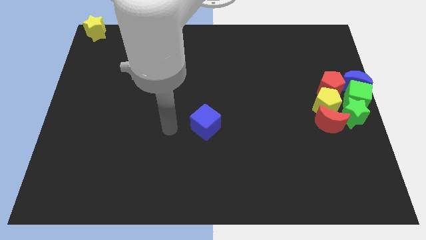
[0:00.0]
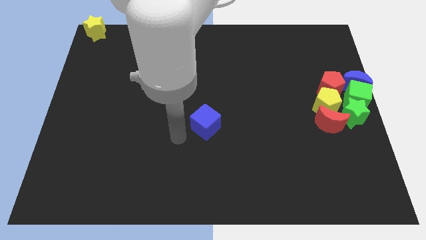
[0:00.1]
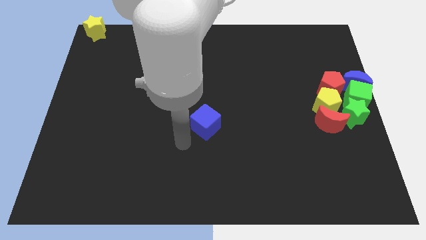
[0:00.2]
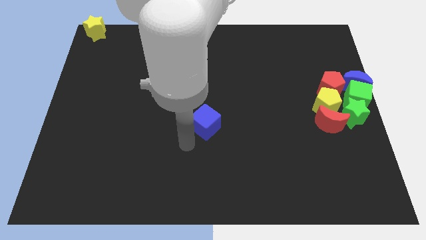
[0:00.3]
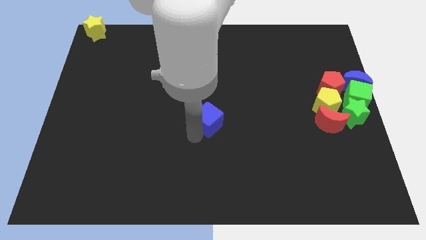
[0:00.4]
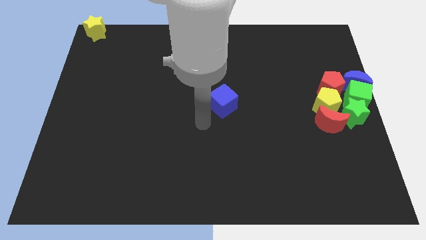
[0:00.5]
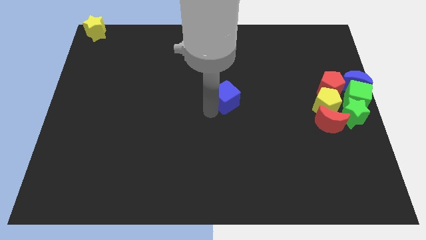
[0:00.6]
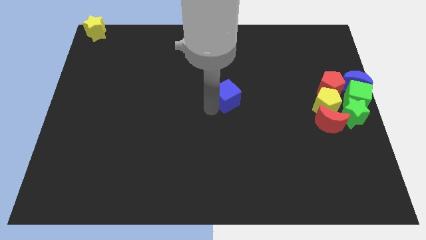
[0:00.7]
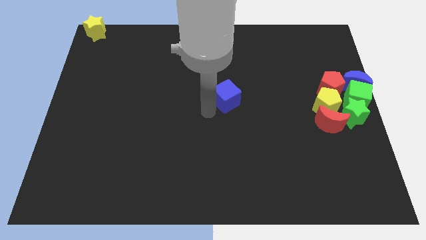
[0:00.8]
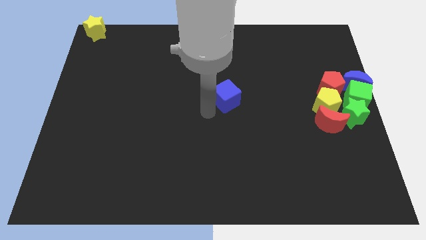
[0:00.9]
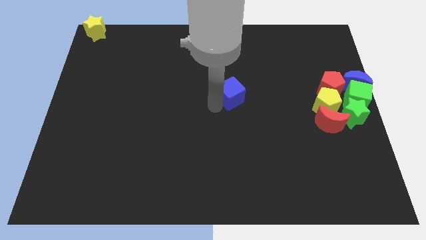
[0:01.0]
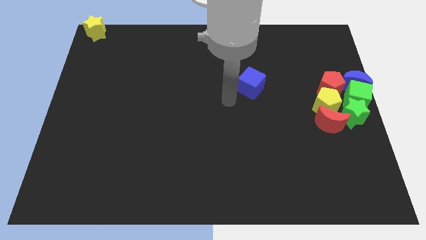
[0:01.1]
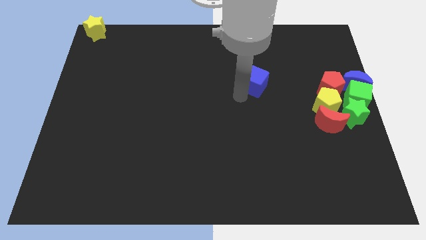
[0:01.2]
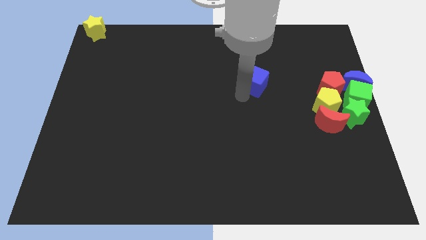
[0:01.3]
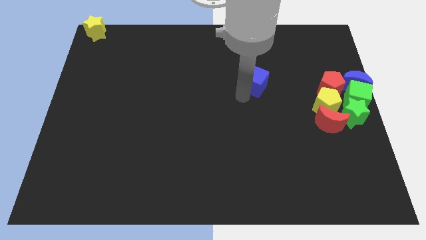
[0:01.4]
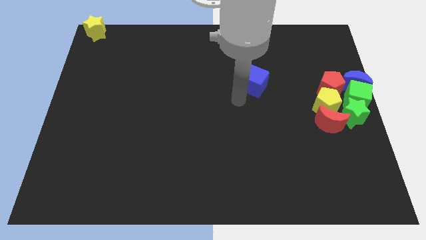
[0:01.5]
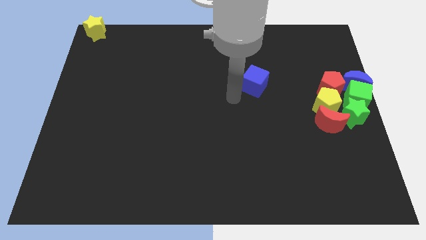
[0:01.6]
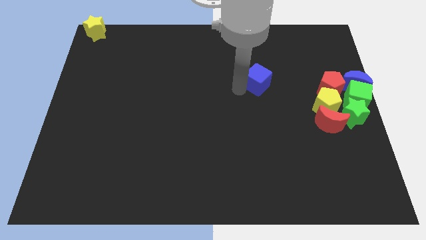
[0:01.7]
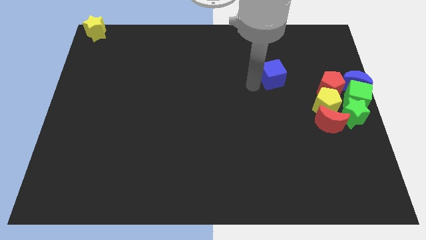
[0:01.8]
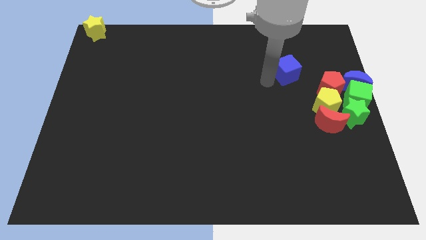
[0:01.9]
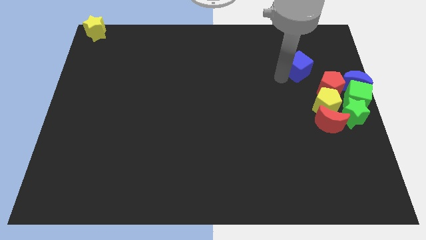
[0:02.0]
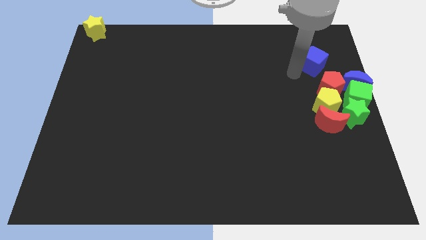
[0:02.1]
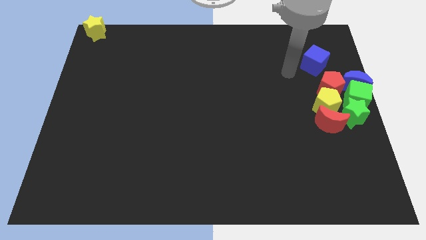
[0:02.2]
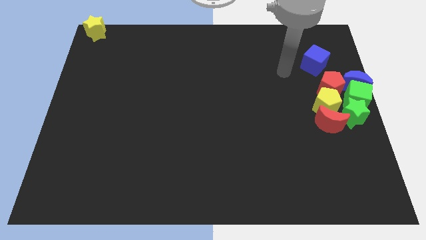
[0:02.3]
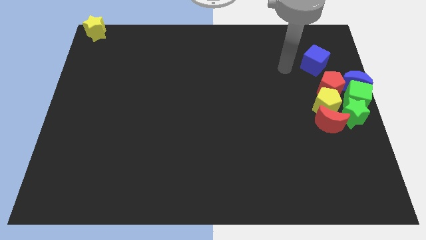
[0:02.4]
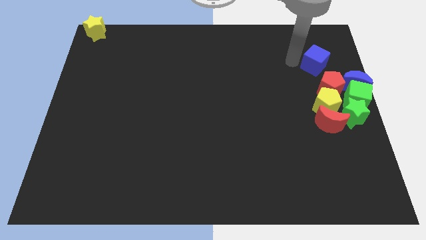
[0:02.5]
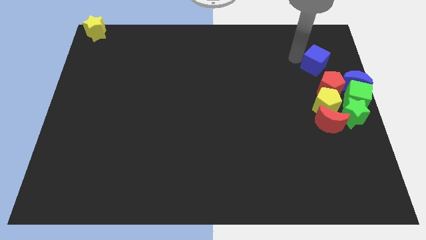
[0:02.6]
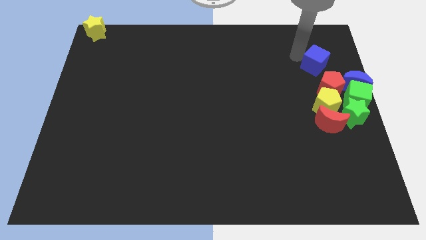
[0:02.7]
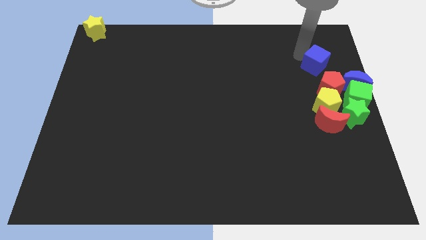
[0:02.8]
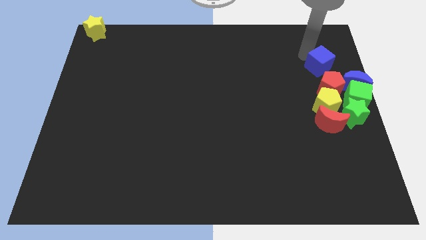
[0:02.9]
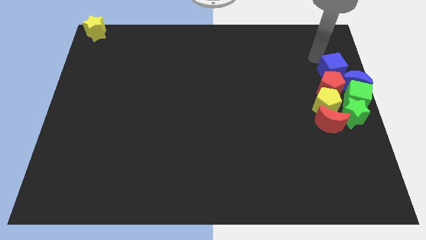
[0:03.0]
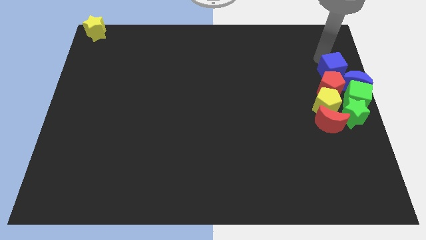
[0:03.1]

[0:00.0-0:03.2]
move the blue cube above the red pentagon

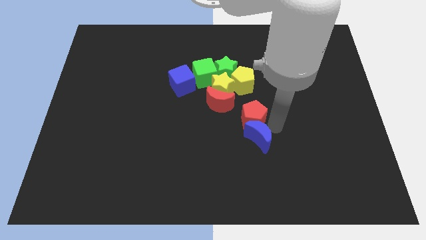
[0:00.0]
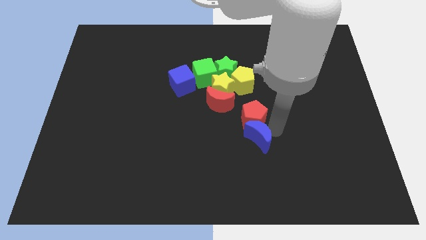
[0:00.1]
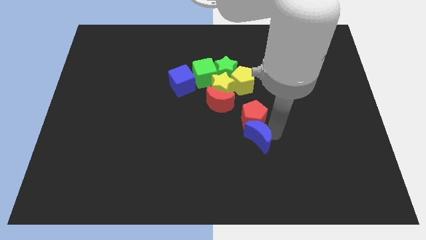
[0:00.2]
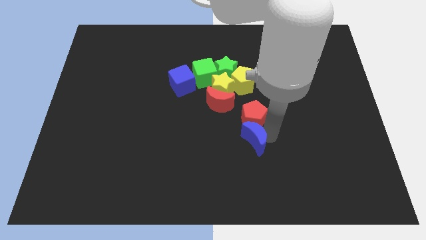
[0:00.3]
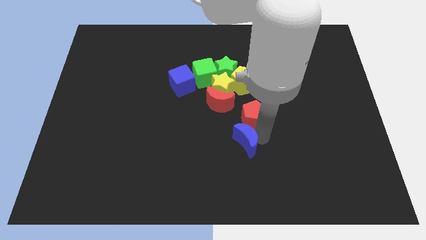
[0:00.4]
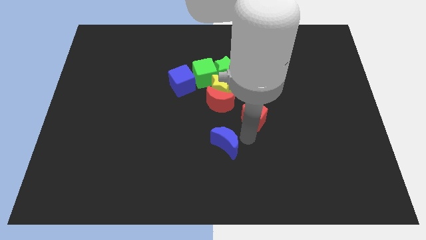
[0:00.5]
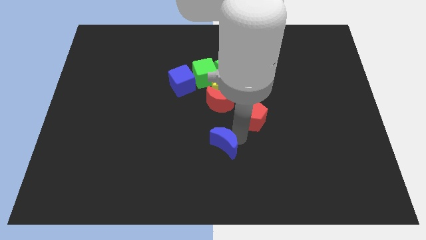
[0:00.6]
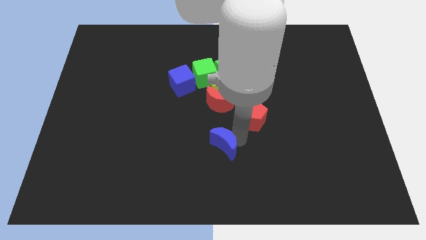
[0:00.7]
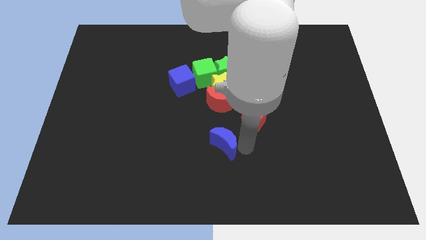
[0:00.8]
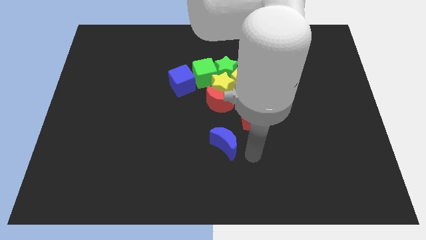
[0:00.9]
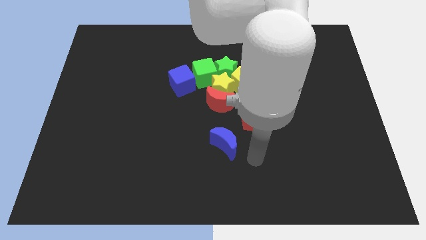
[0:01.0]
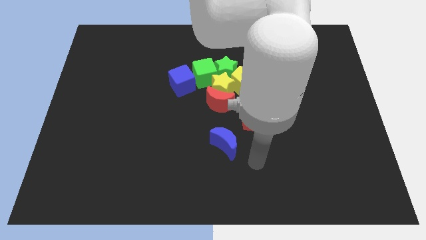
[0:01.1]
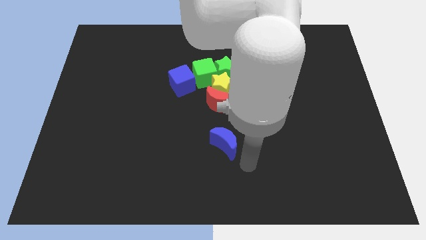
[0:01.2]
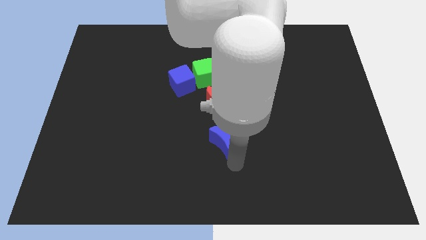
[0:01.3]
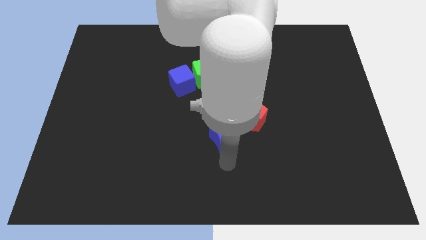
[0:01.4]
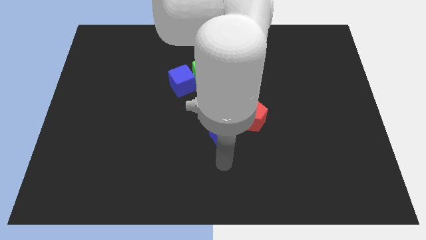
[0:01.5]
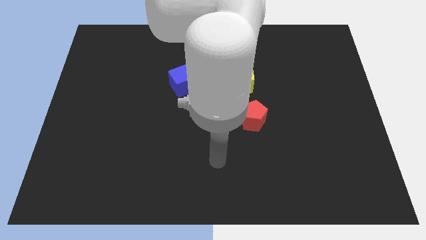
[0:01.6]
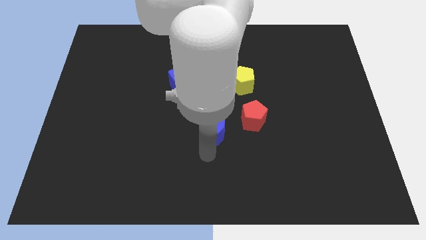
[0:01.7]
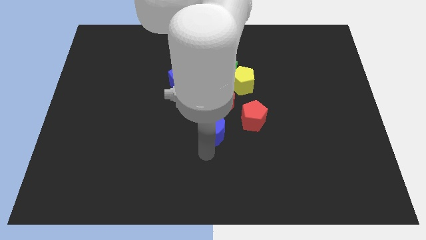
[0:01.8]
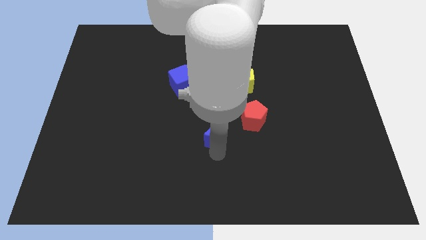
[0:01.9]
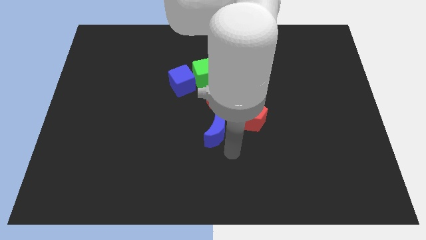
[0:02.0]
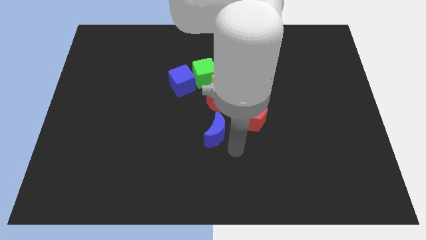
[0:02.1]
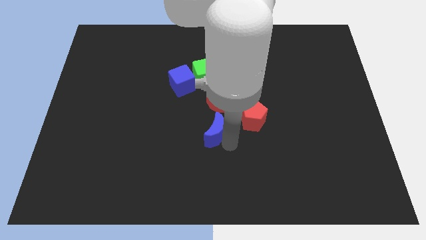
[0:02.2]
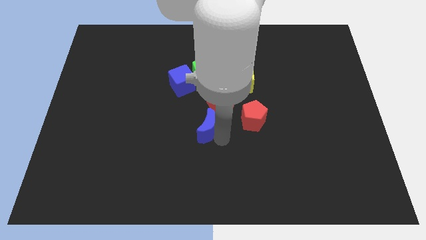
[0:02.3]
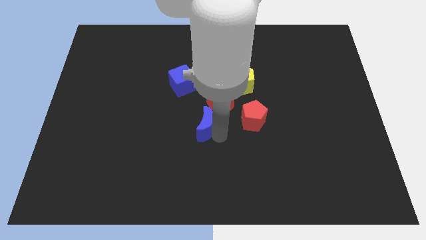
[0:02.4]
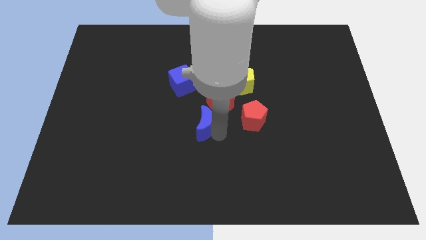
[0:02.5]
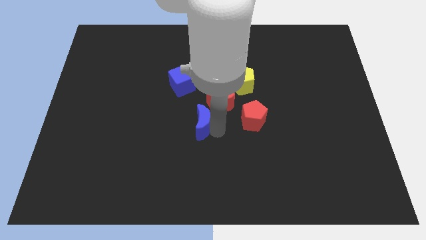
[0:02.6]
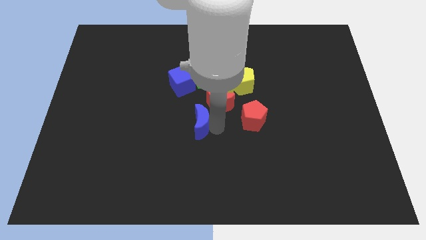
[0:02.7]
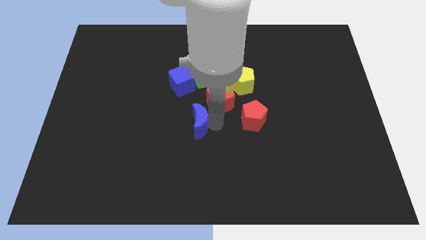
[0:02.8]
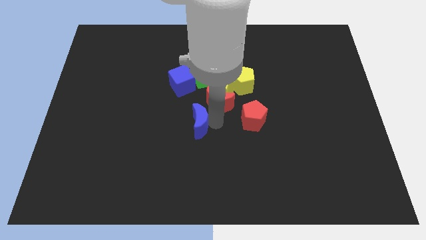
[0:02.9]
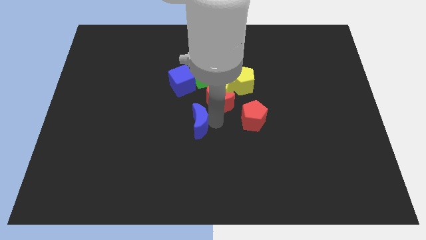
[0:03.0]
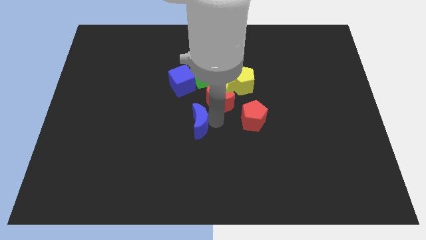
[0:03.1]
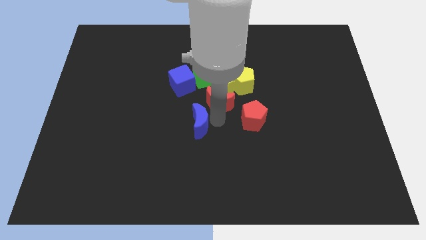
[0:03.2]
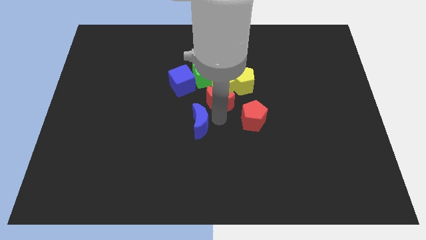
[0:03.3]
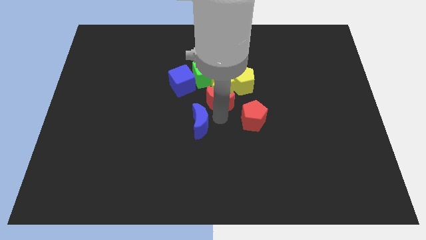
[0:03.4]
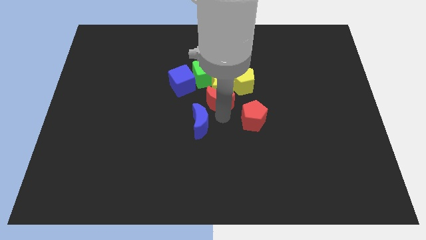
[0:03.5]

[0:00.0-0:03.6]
mov ethe blue moon to the left of the red pentagon

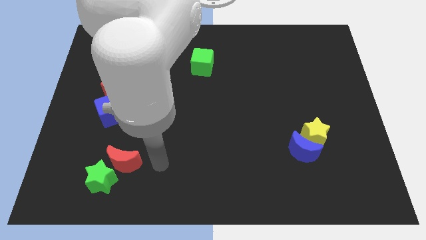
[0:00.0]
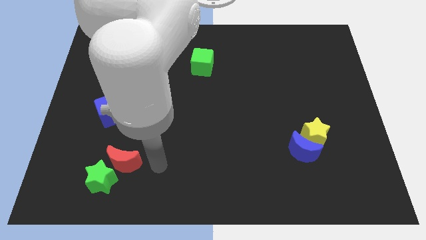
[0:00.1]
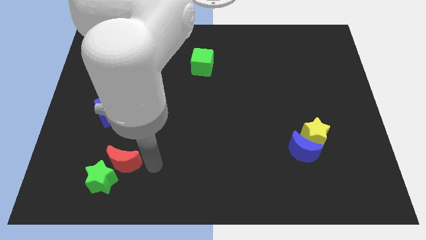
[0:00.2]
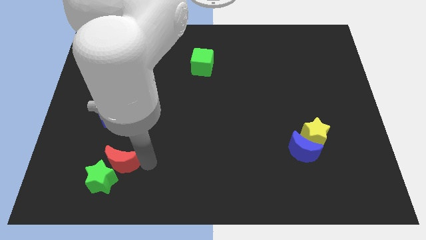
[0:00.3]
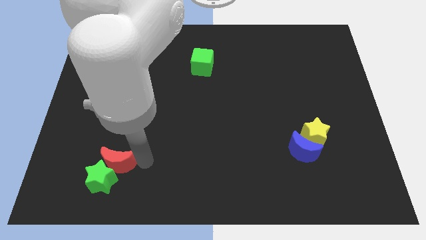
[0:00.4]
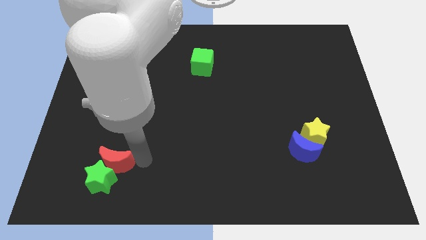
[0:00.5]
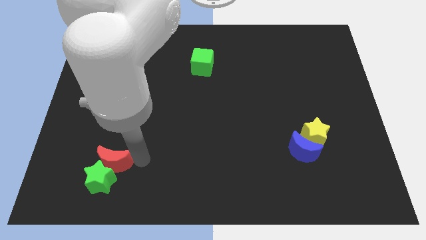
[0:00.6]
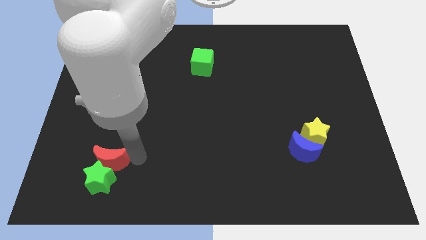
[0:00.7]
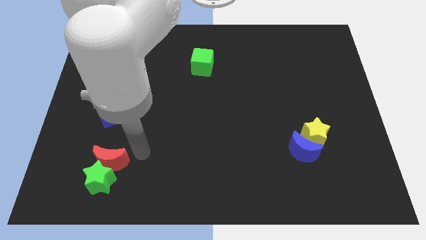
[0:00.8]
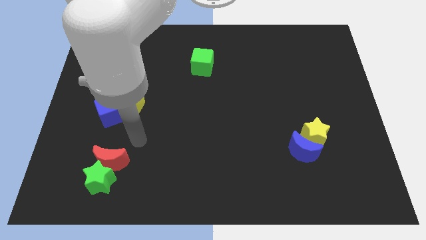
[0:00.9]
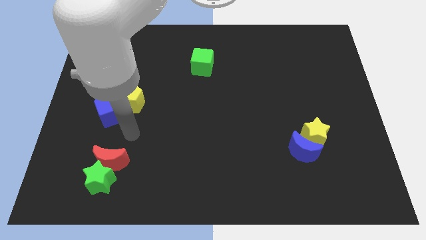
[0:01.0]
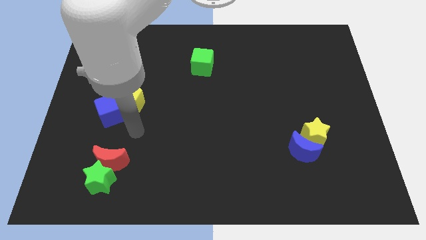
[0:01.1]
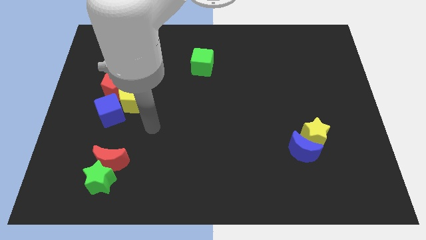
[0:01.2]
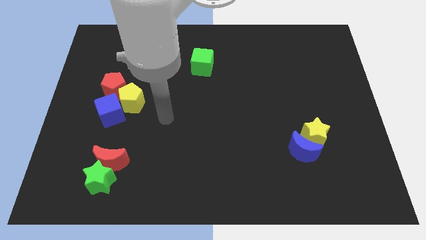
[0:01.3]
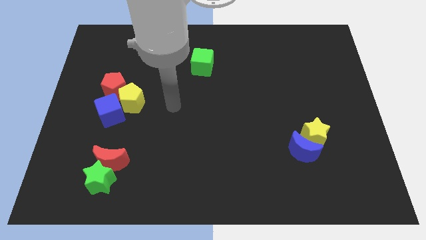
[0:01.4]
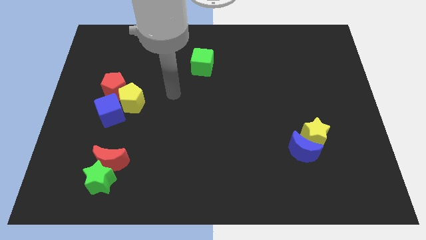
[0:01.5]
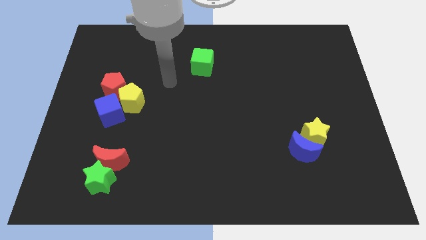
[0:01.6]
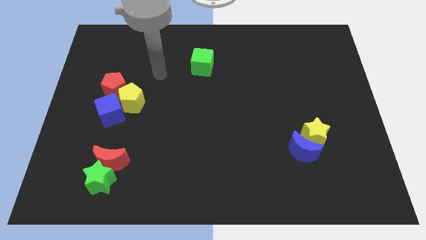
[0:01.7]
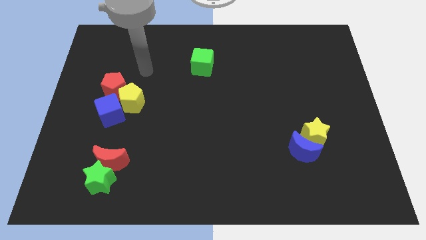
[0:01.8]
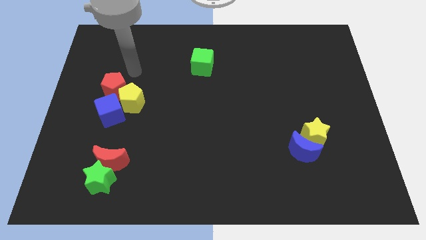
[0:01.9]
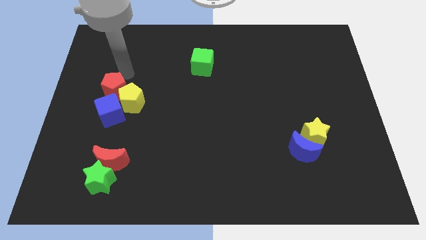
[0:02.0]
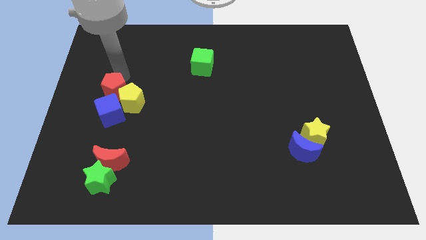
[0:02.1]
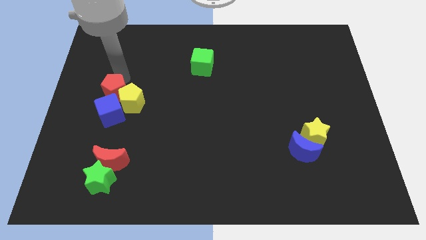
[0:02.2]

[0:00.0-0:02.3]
move the red crescent above the green star
